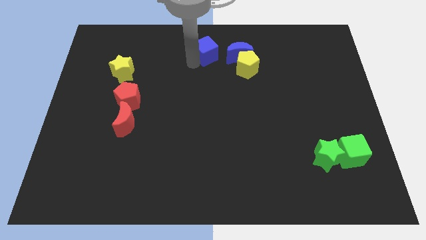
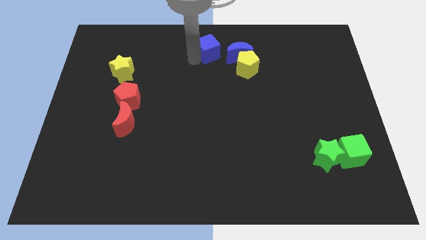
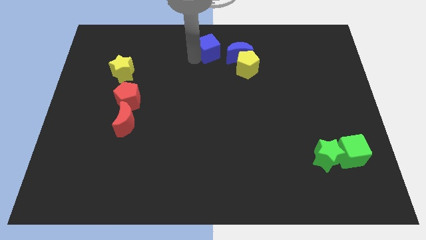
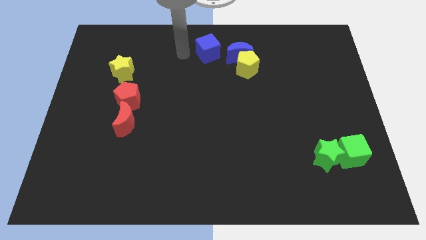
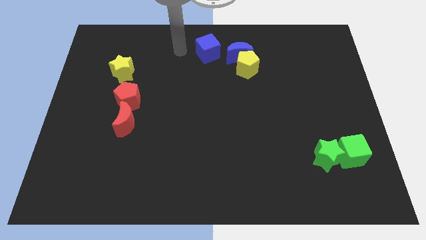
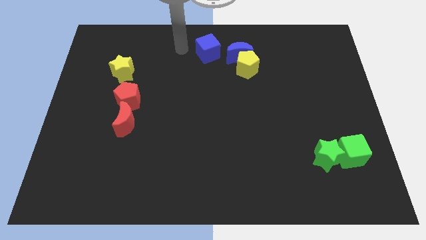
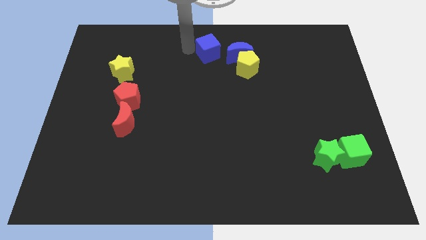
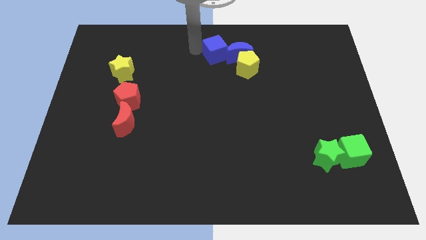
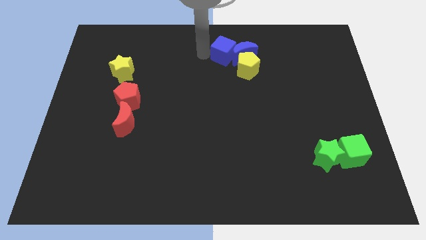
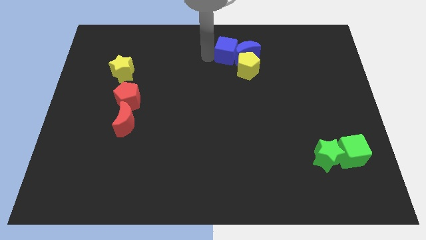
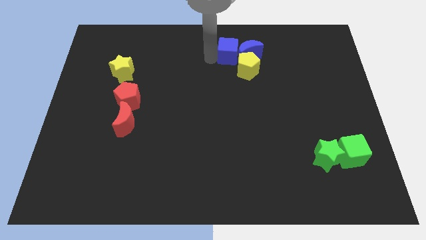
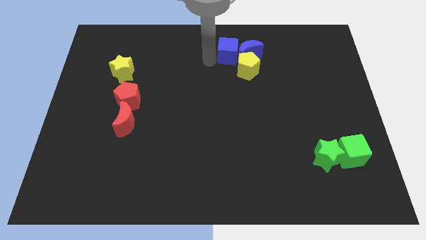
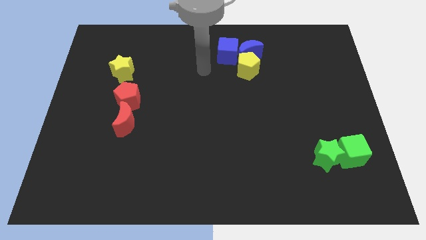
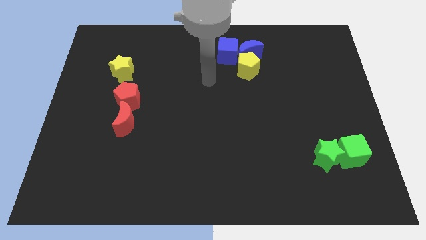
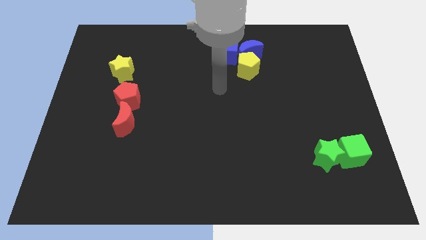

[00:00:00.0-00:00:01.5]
move blue cube into the blue crescent towards the right side

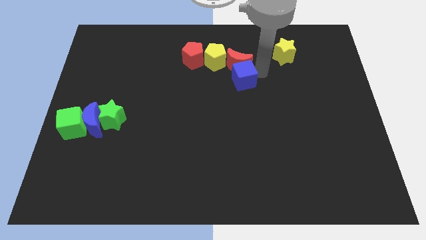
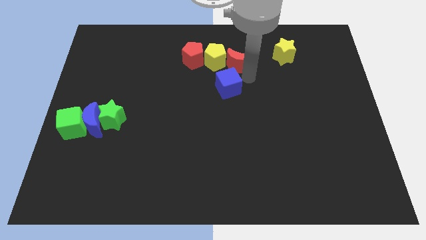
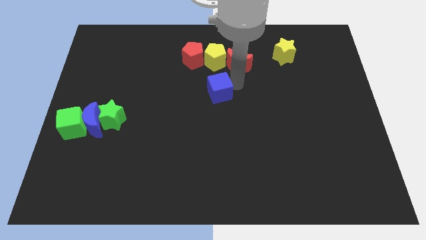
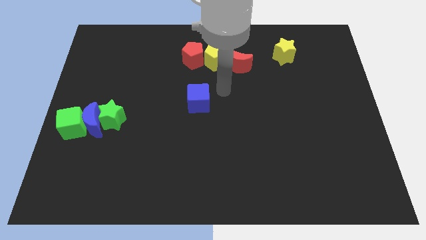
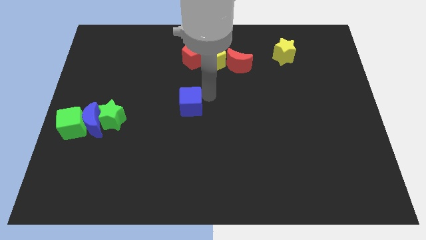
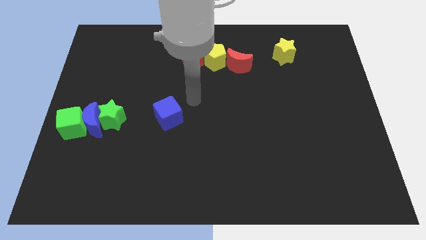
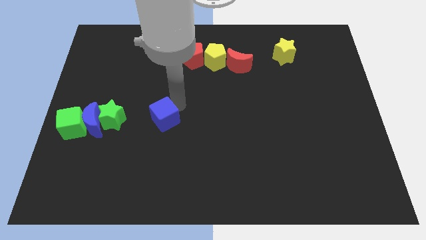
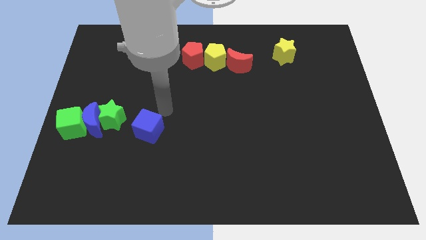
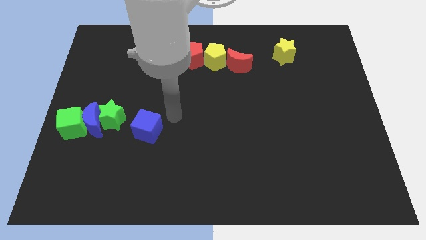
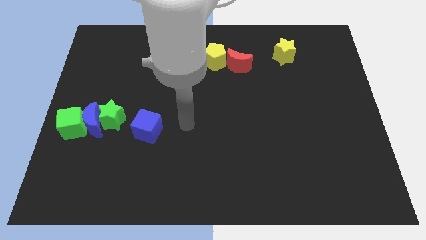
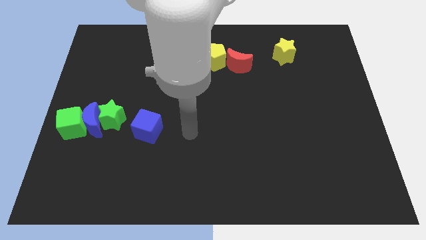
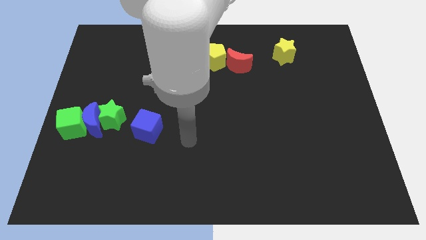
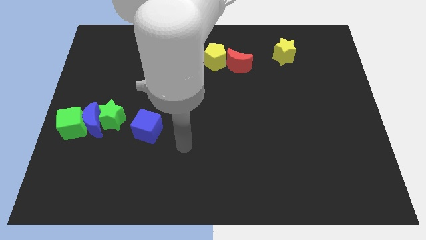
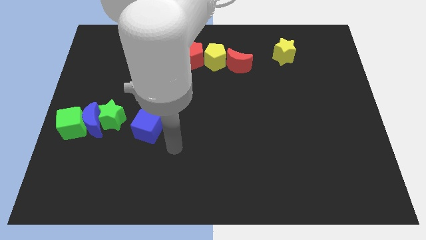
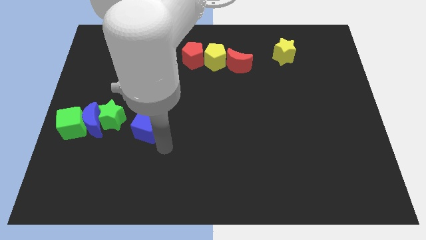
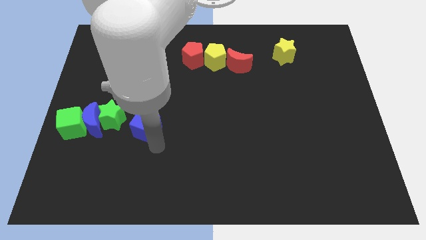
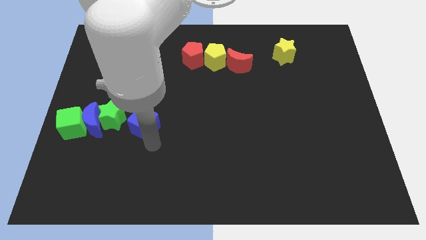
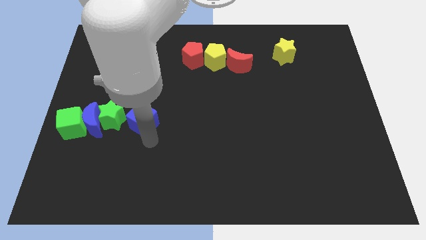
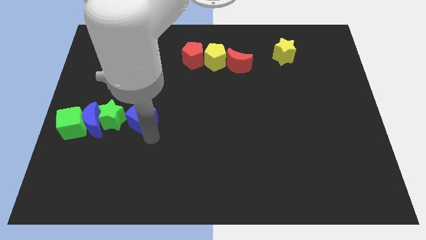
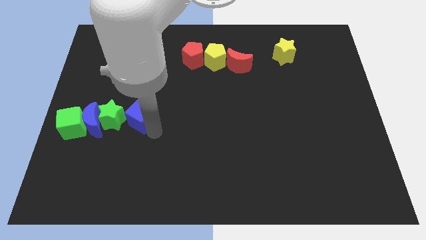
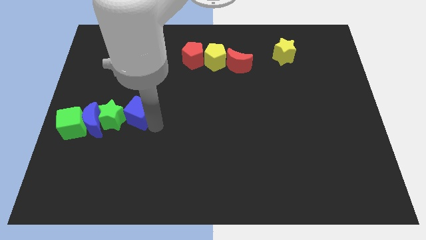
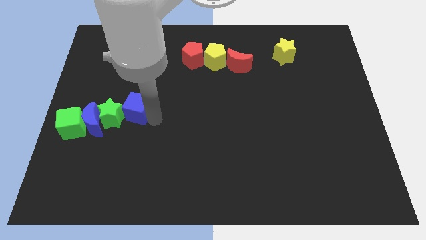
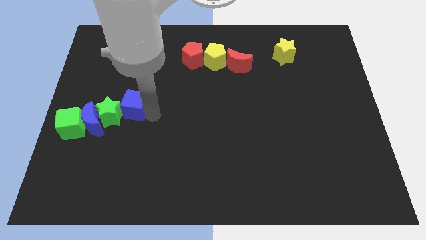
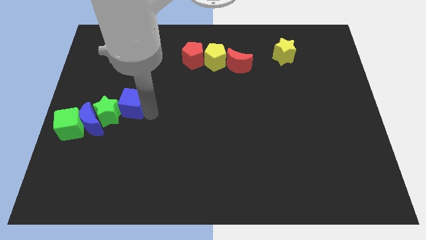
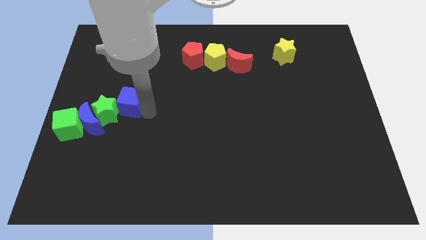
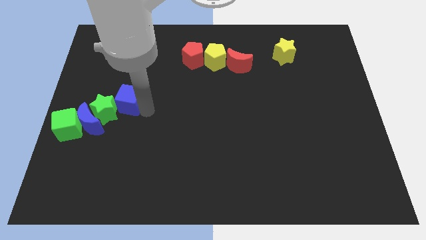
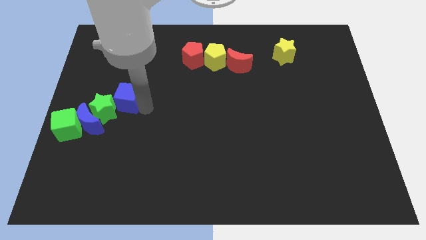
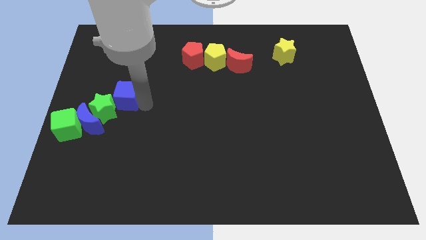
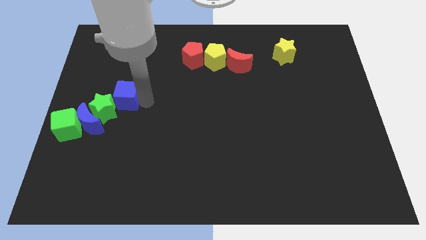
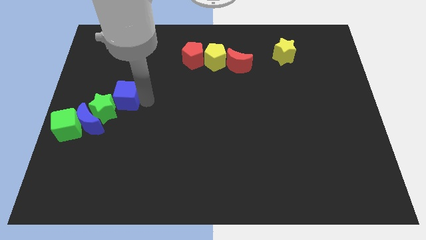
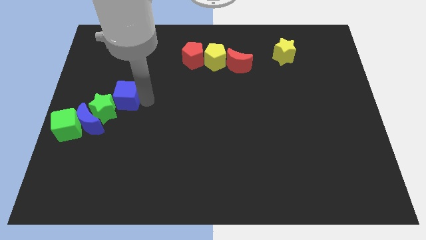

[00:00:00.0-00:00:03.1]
move the blue cube next to the green star

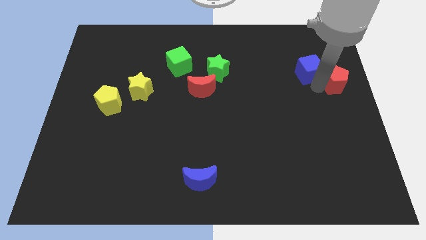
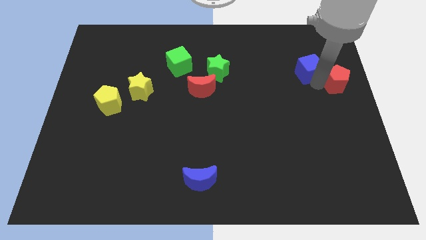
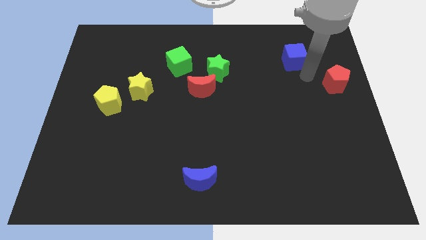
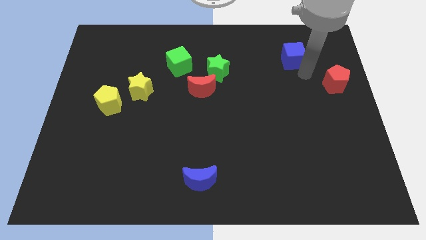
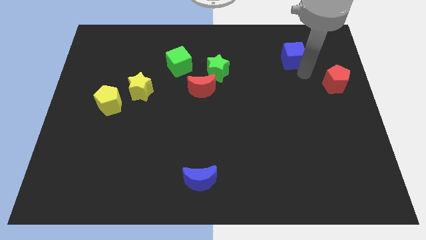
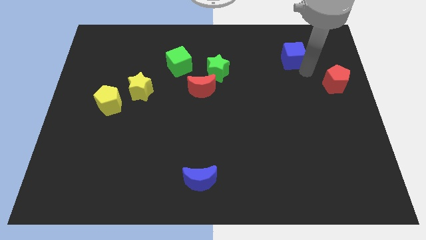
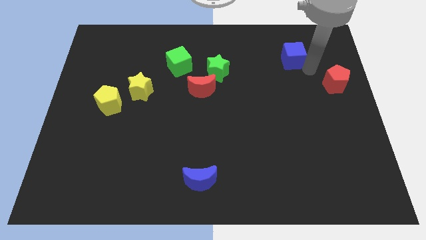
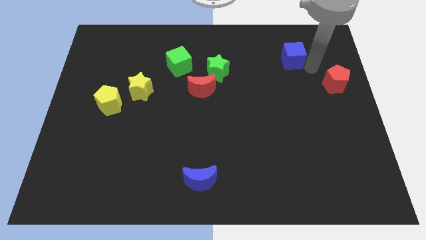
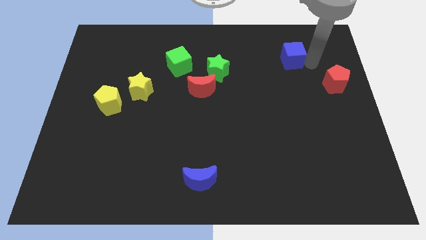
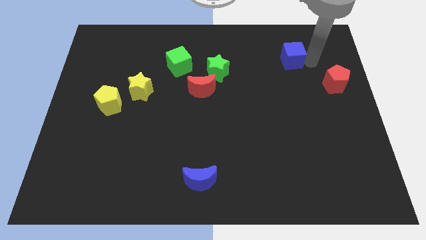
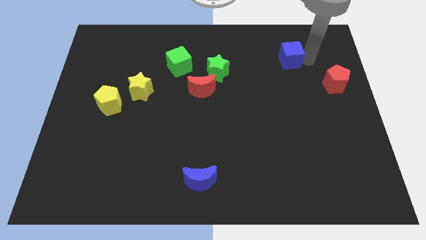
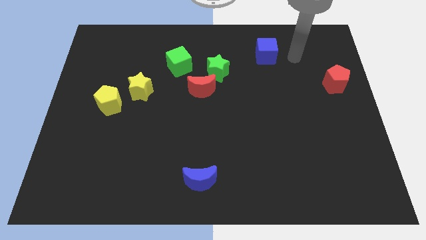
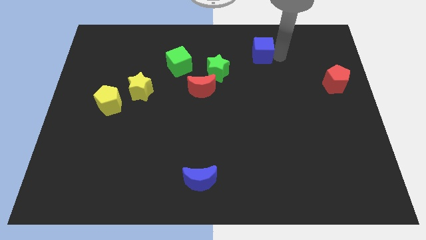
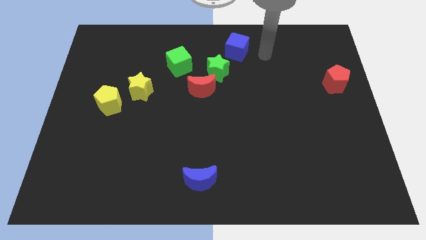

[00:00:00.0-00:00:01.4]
separate the blue cube from red pentagon

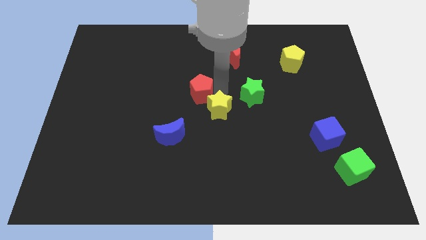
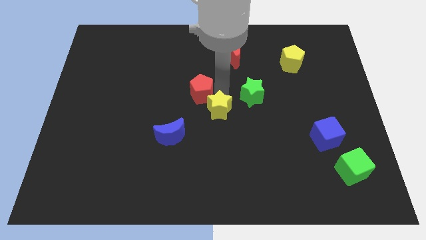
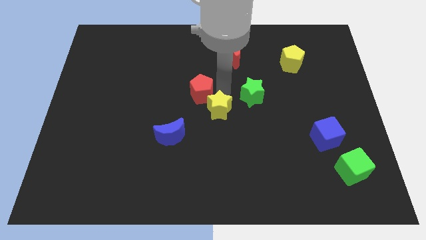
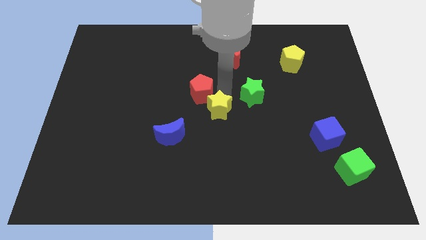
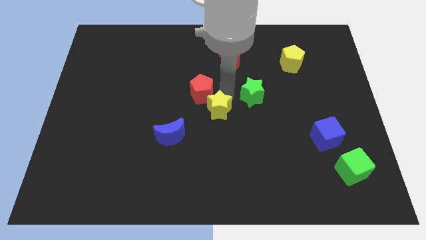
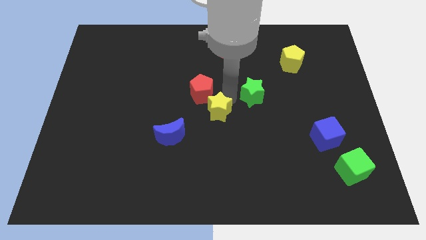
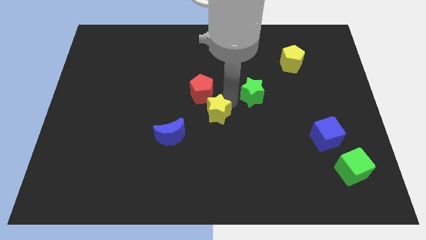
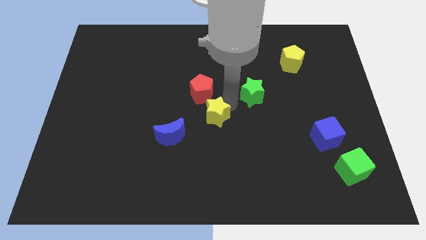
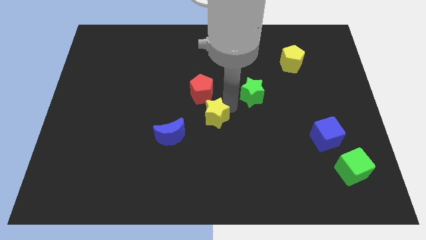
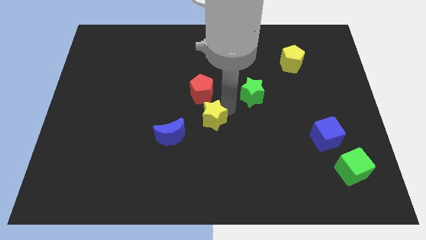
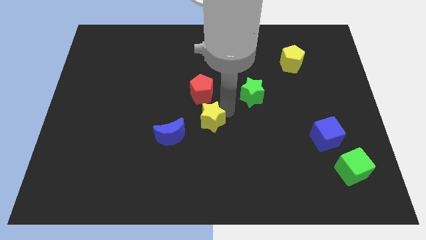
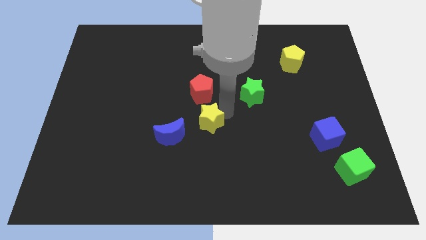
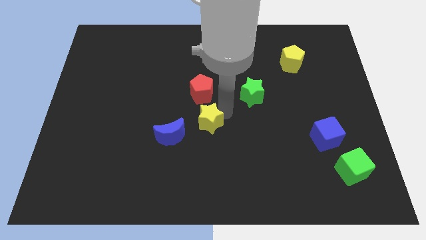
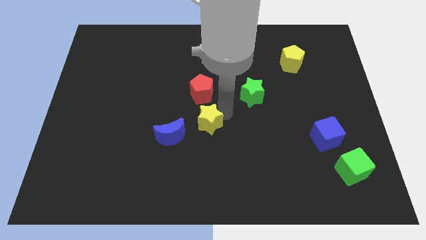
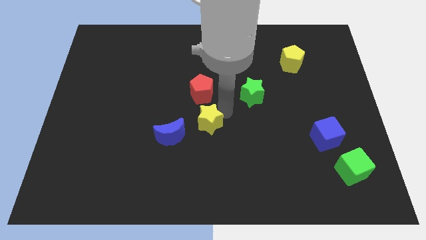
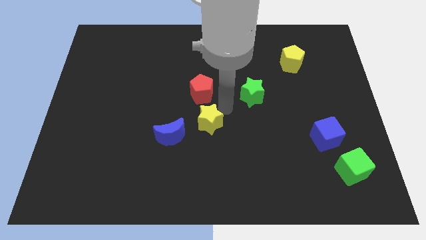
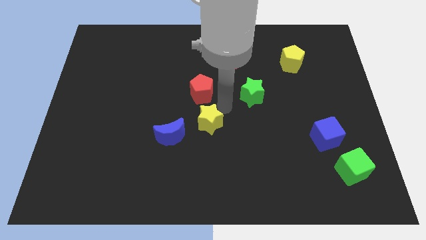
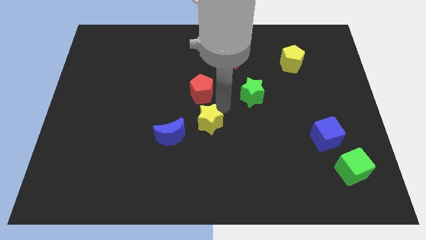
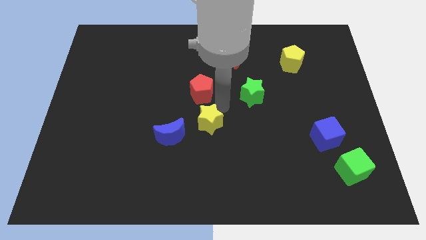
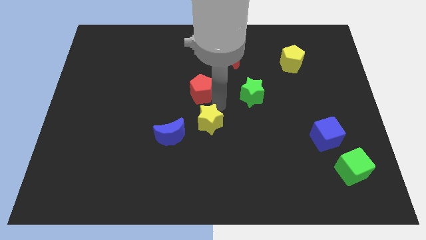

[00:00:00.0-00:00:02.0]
separate the yellow star from the red pentagon

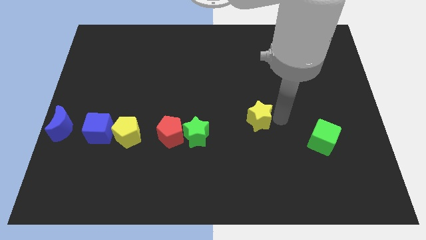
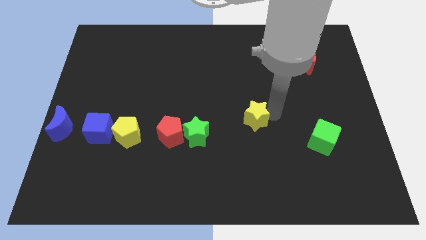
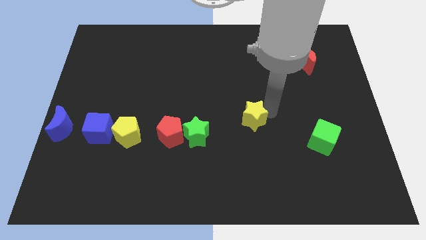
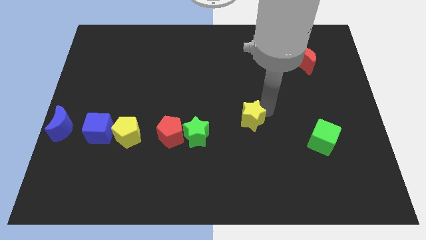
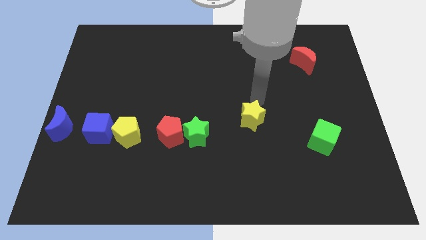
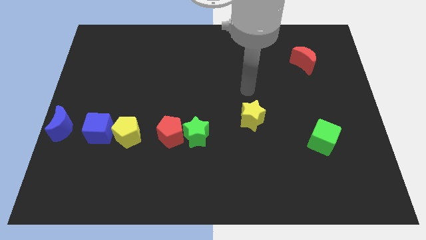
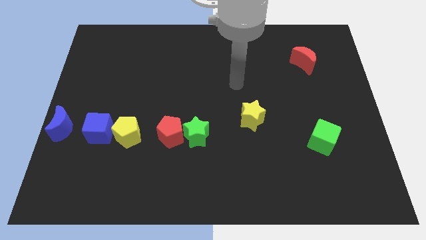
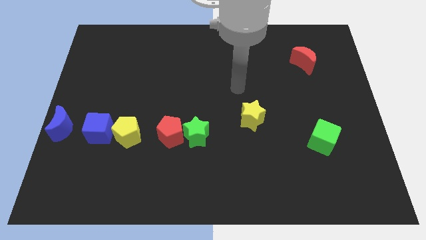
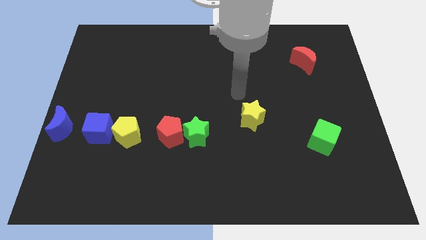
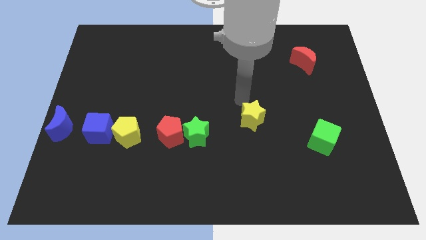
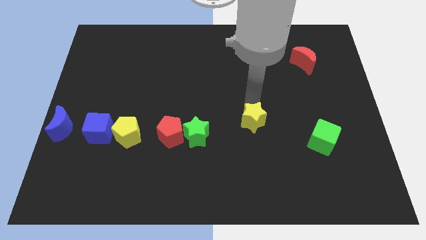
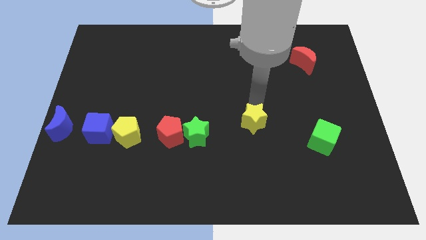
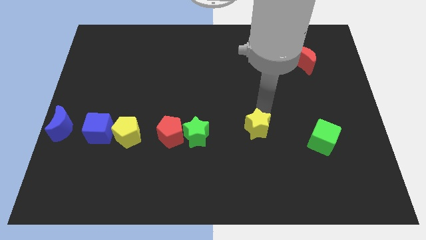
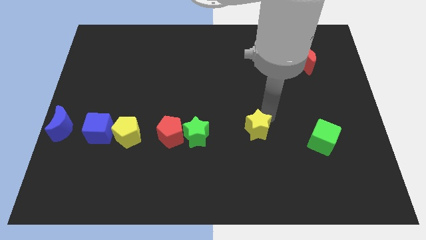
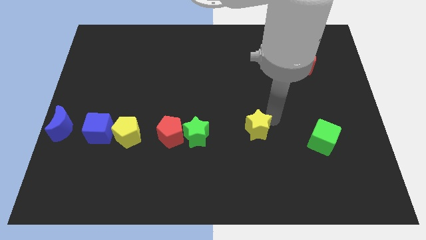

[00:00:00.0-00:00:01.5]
move the yellow star slightly to the bottom side
